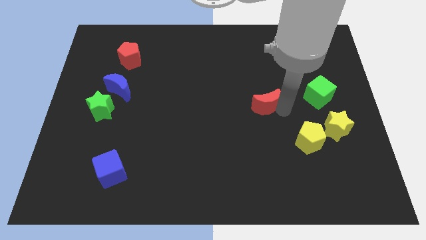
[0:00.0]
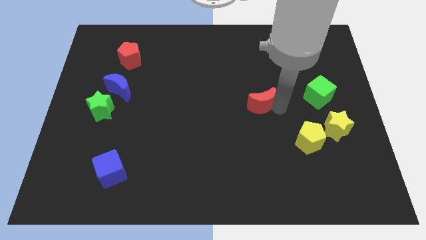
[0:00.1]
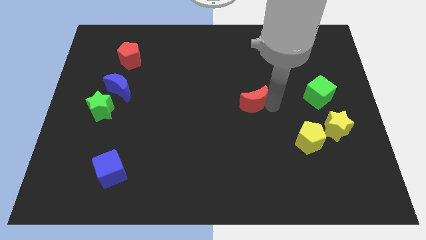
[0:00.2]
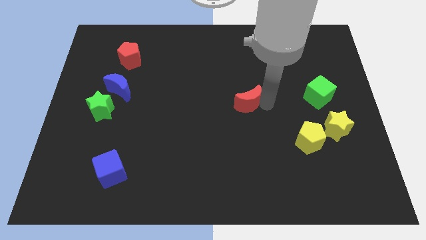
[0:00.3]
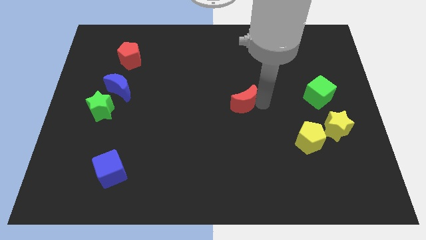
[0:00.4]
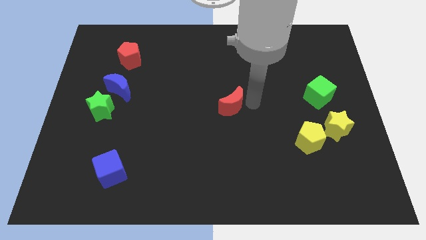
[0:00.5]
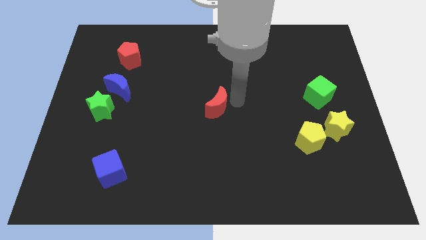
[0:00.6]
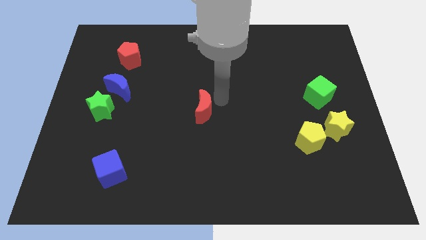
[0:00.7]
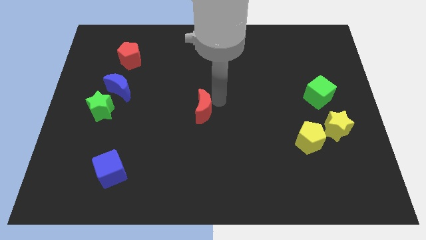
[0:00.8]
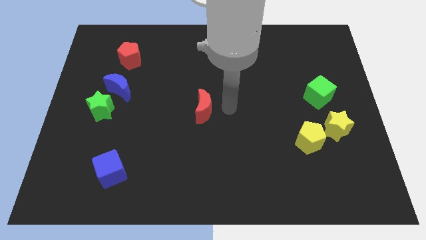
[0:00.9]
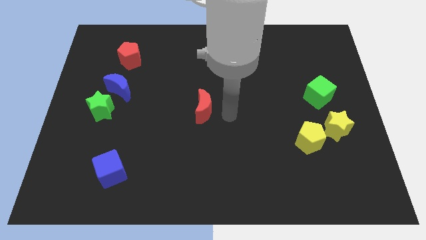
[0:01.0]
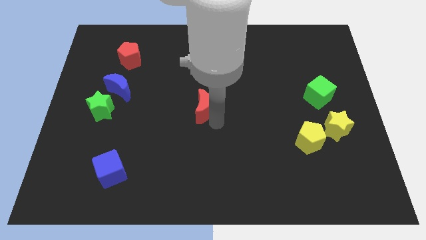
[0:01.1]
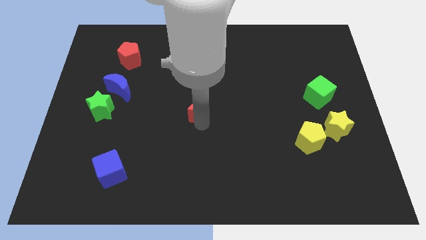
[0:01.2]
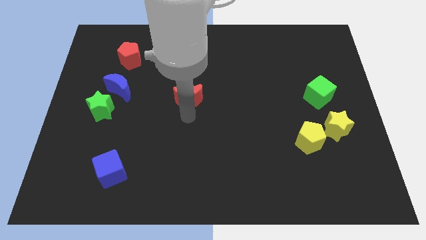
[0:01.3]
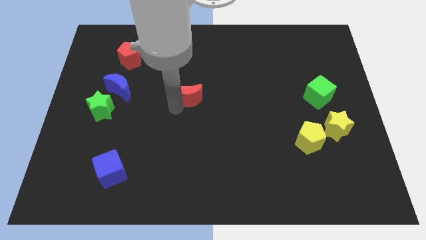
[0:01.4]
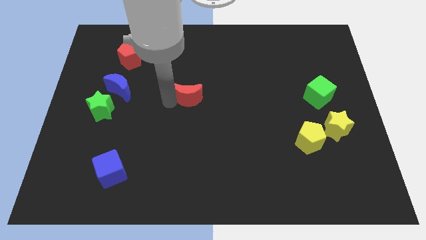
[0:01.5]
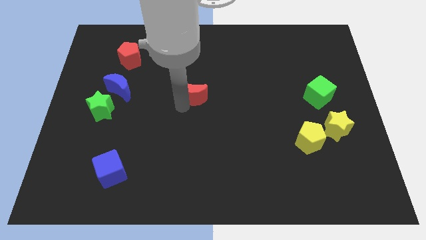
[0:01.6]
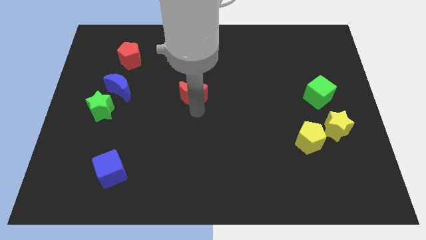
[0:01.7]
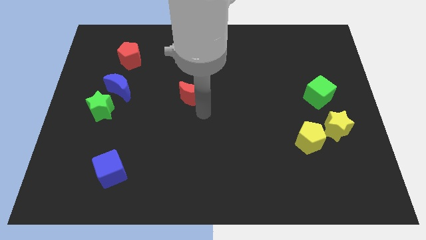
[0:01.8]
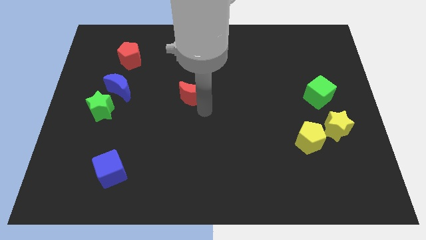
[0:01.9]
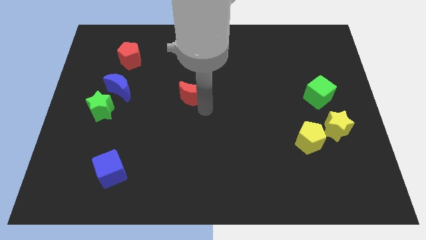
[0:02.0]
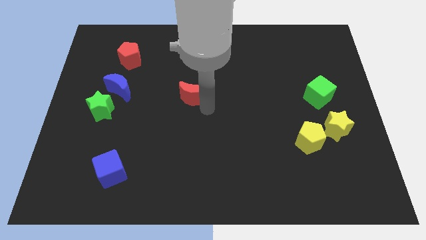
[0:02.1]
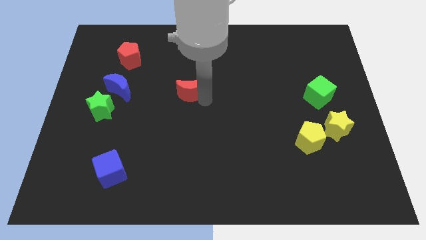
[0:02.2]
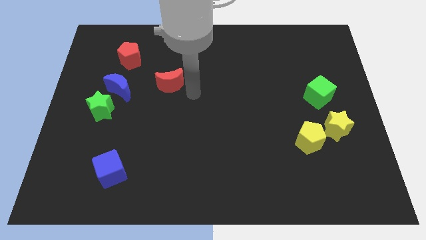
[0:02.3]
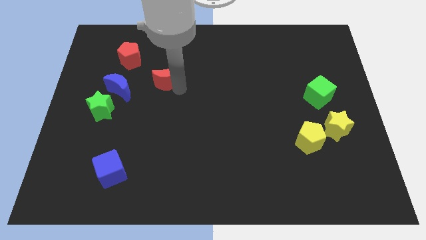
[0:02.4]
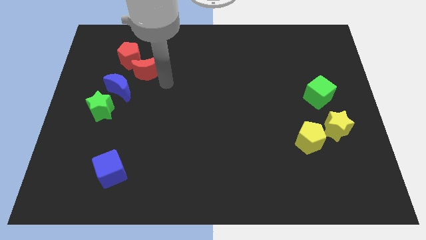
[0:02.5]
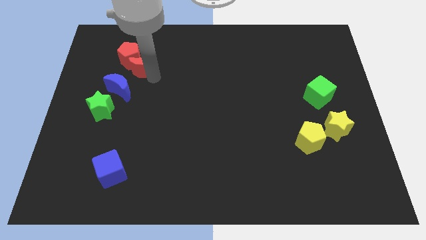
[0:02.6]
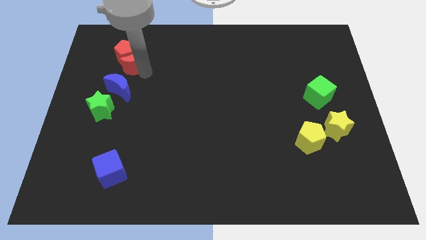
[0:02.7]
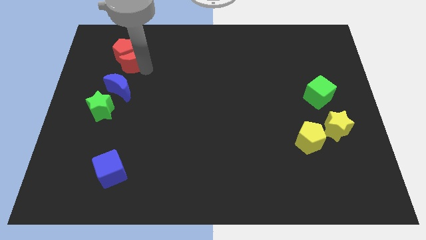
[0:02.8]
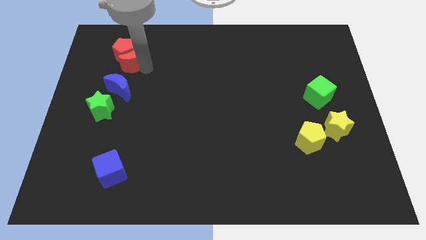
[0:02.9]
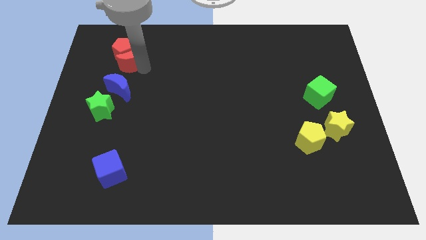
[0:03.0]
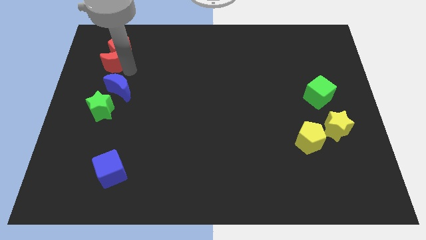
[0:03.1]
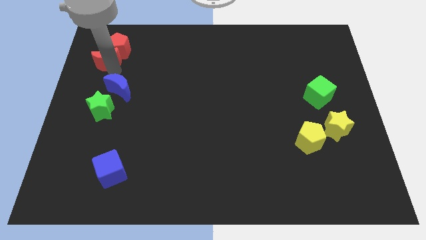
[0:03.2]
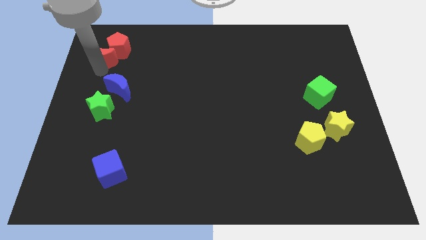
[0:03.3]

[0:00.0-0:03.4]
push the red moon into the red pentagon

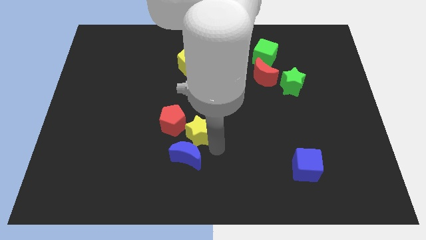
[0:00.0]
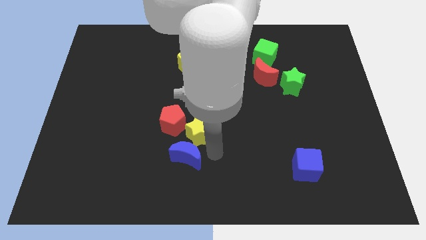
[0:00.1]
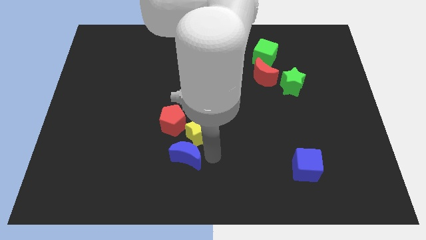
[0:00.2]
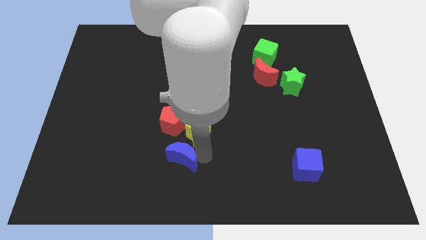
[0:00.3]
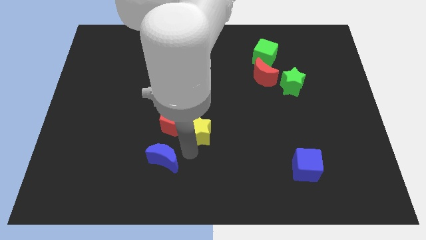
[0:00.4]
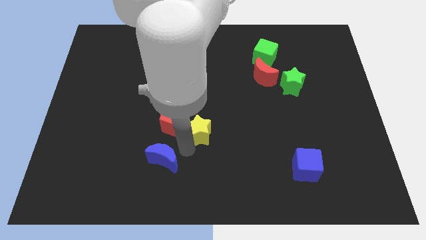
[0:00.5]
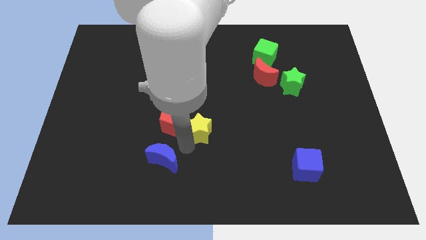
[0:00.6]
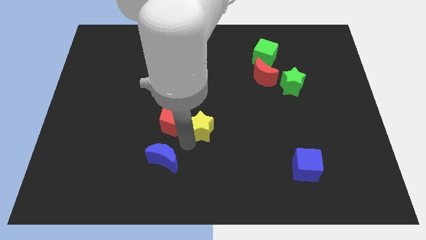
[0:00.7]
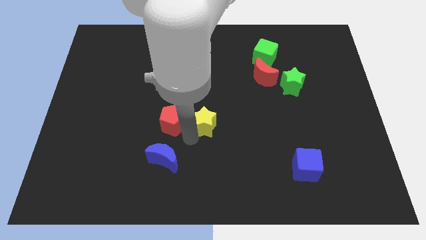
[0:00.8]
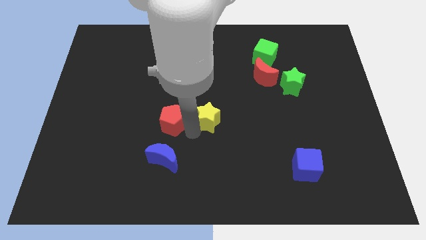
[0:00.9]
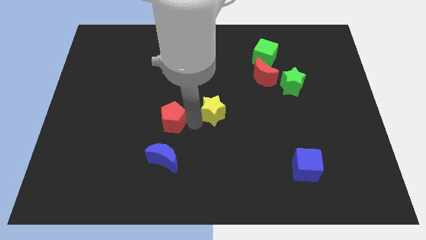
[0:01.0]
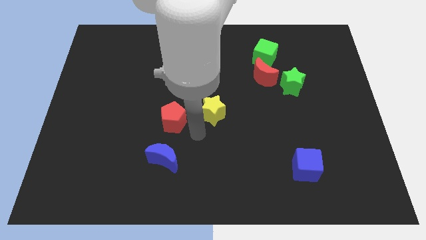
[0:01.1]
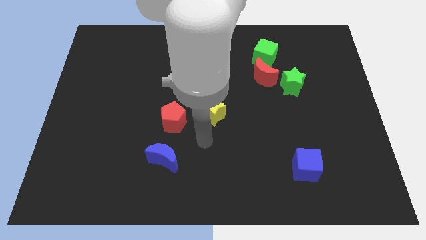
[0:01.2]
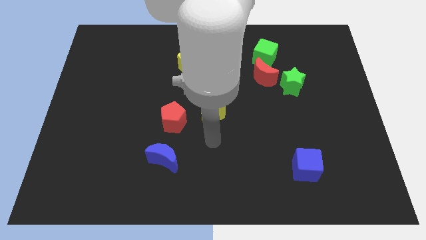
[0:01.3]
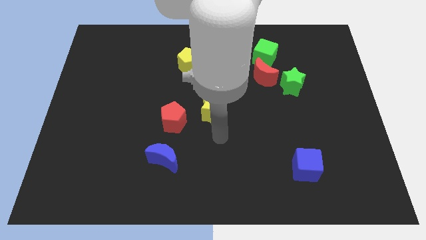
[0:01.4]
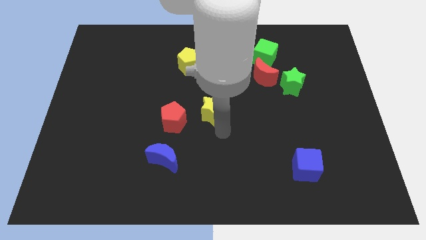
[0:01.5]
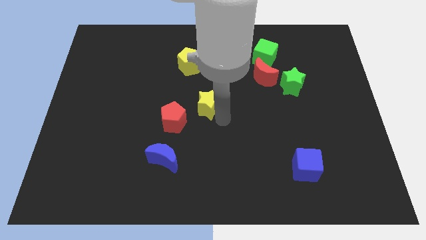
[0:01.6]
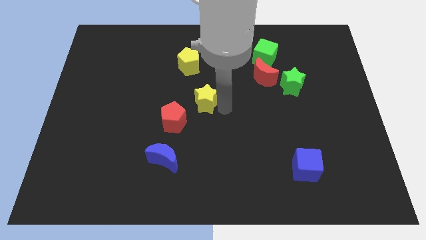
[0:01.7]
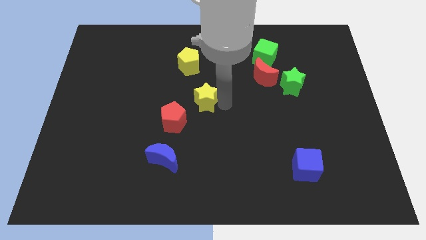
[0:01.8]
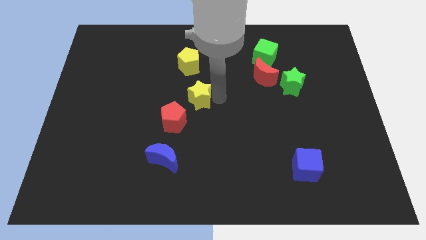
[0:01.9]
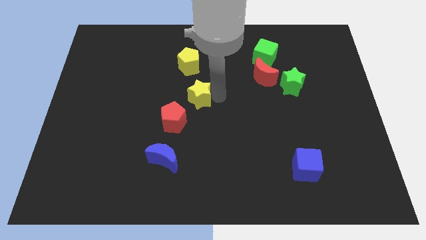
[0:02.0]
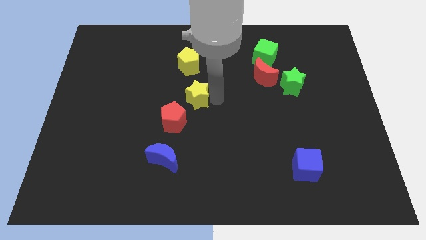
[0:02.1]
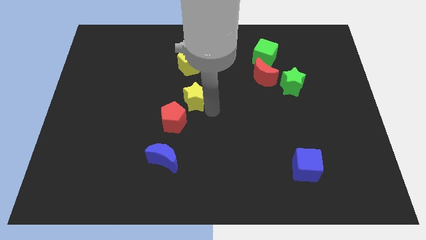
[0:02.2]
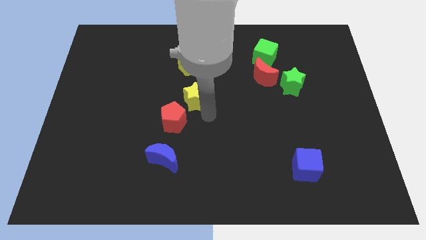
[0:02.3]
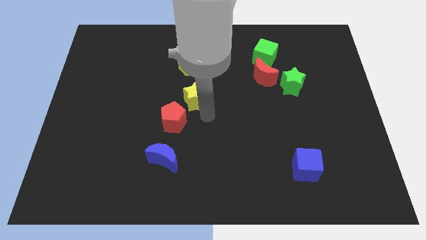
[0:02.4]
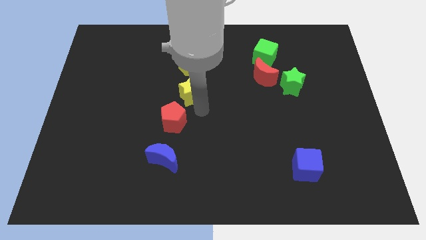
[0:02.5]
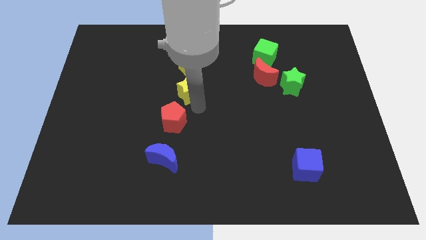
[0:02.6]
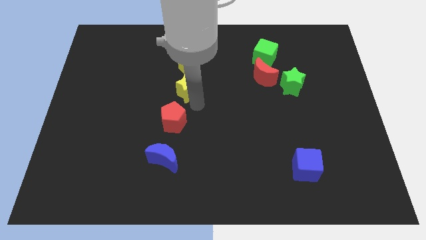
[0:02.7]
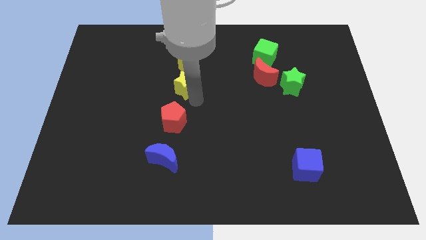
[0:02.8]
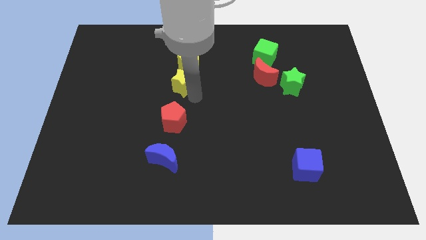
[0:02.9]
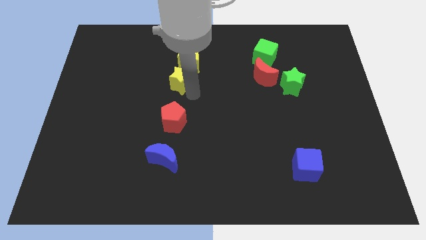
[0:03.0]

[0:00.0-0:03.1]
place yellow star below yellow pentagon

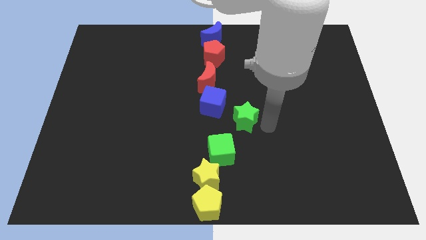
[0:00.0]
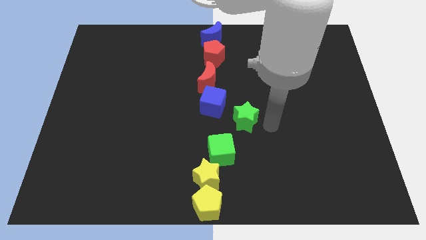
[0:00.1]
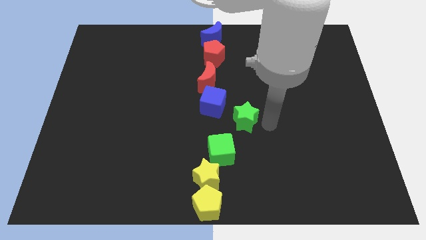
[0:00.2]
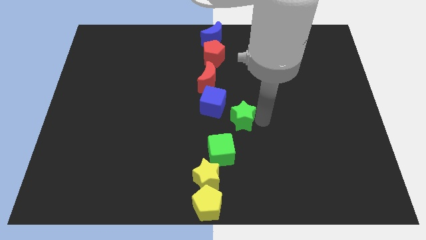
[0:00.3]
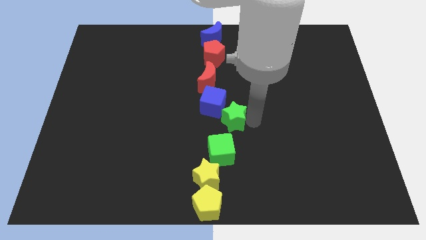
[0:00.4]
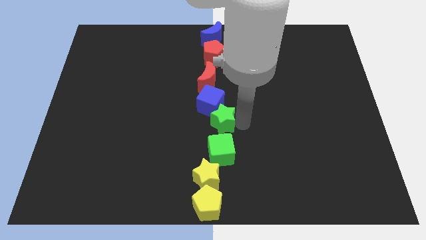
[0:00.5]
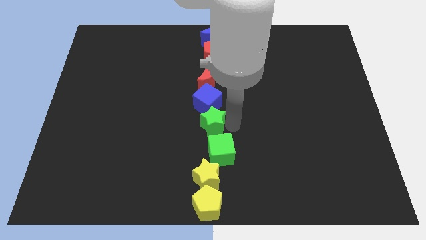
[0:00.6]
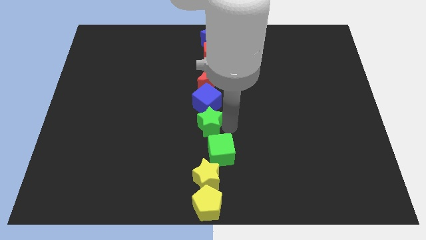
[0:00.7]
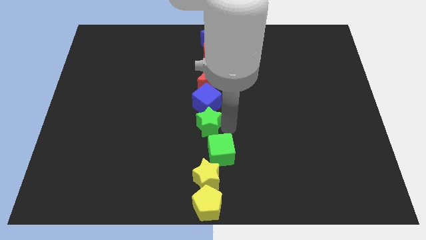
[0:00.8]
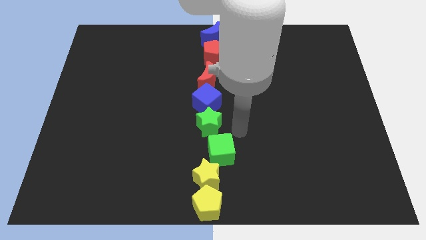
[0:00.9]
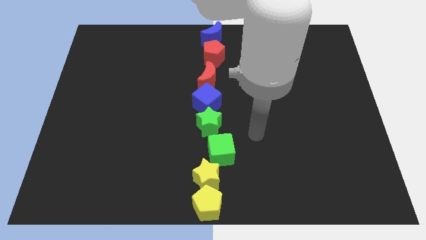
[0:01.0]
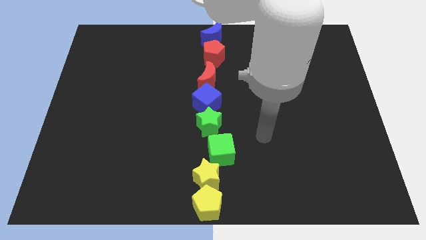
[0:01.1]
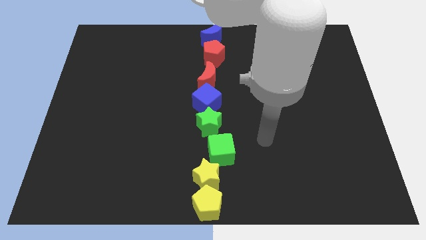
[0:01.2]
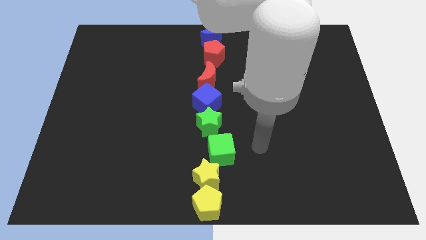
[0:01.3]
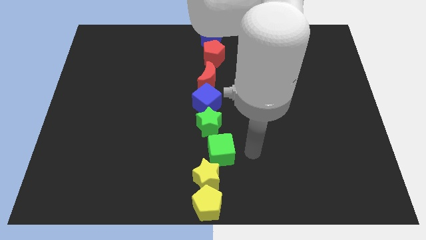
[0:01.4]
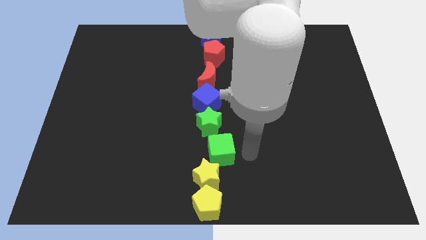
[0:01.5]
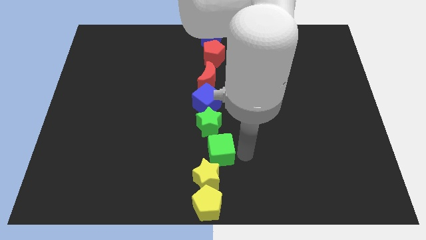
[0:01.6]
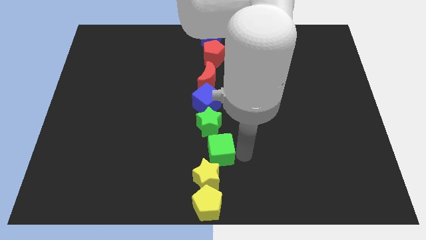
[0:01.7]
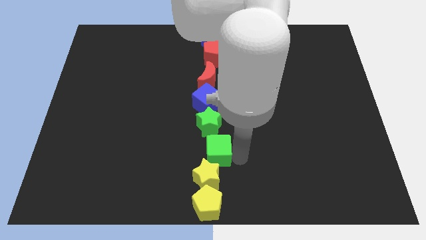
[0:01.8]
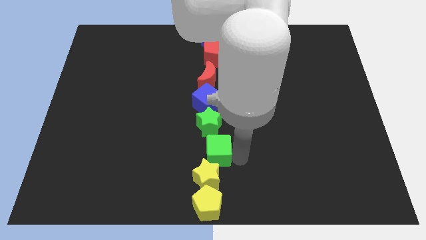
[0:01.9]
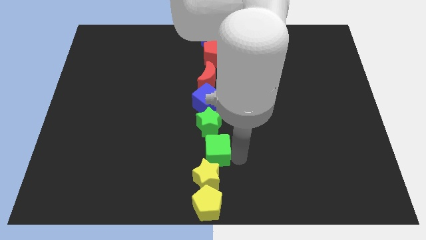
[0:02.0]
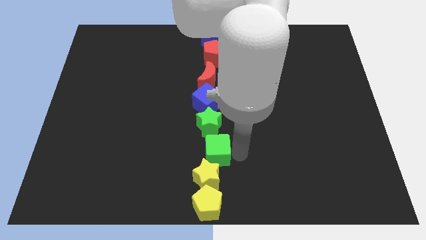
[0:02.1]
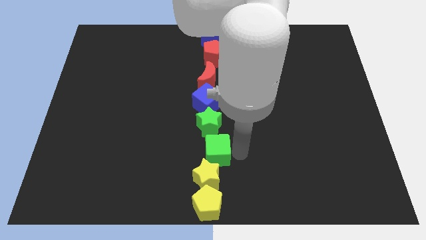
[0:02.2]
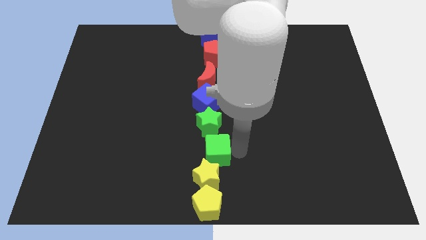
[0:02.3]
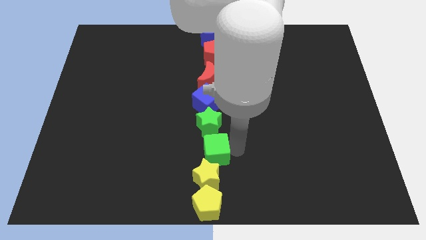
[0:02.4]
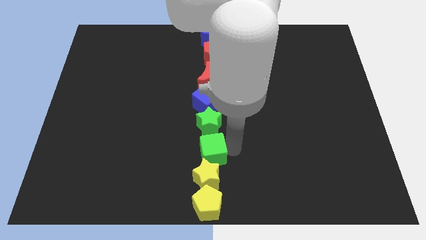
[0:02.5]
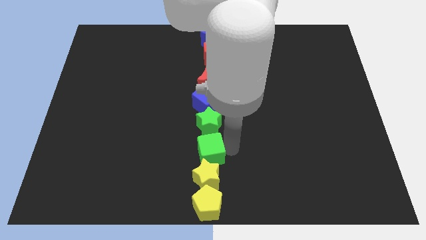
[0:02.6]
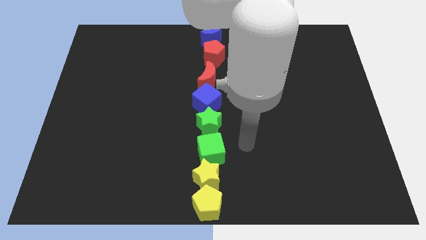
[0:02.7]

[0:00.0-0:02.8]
push green cube slightly towards left
